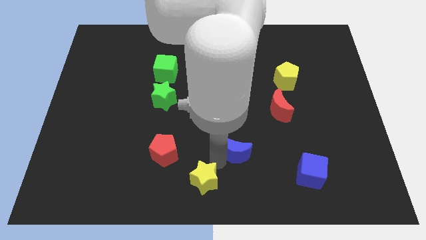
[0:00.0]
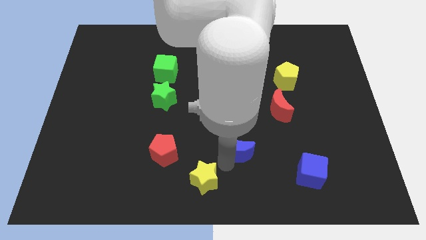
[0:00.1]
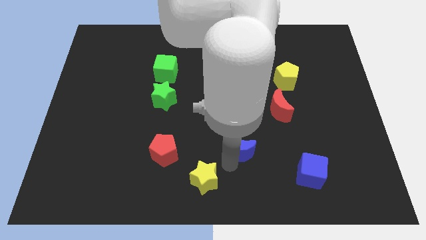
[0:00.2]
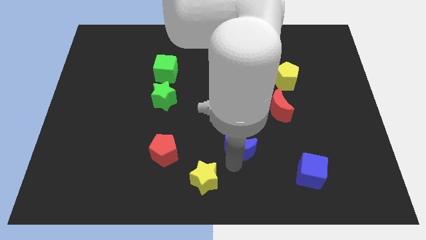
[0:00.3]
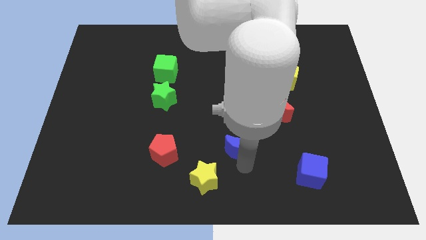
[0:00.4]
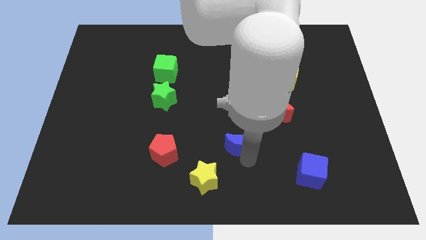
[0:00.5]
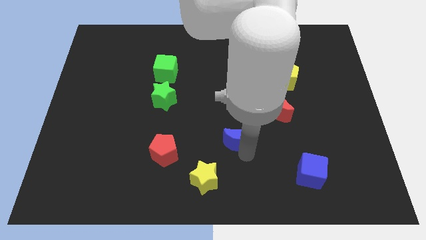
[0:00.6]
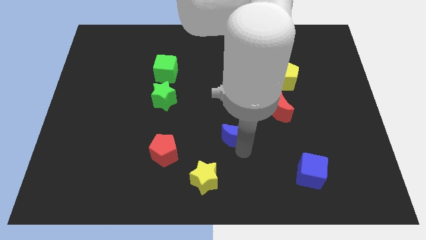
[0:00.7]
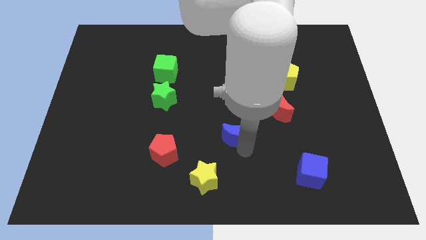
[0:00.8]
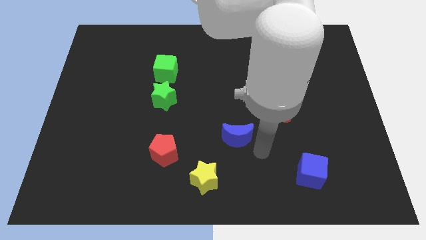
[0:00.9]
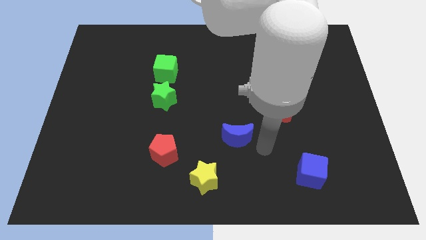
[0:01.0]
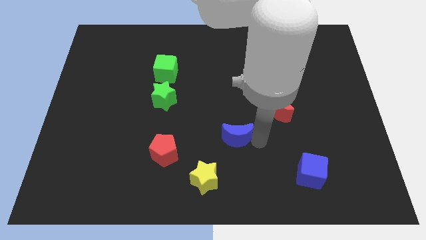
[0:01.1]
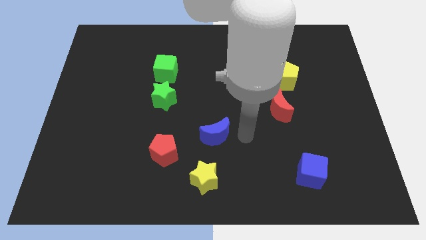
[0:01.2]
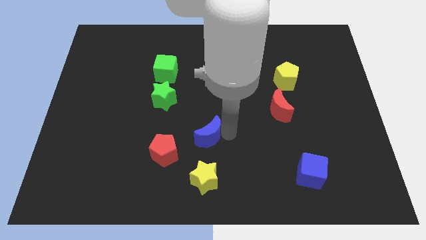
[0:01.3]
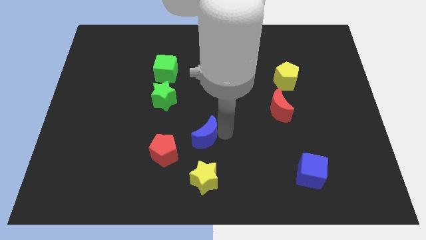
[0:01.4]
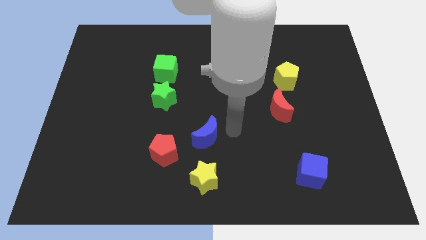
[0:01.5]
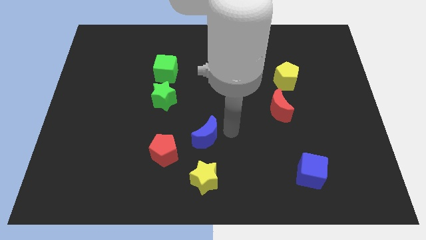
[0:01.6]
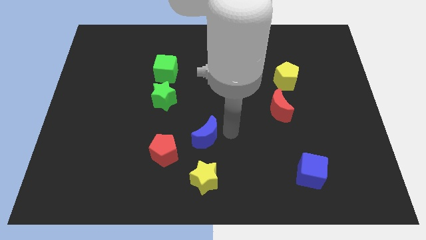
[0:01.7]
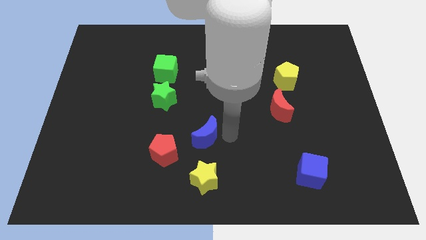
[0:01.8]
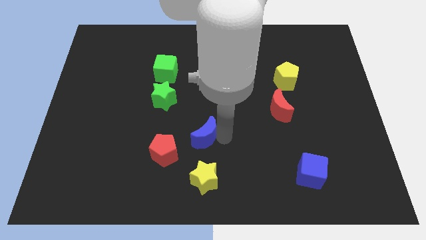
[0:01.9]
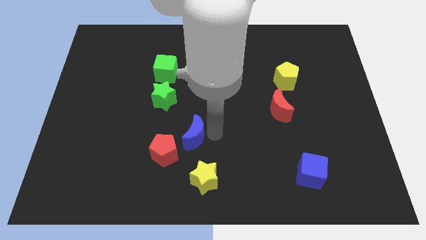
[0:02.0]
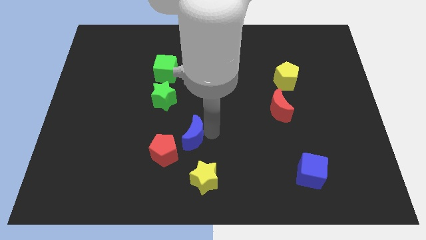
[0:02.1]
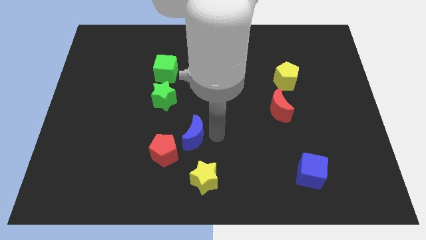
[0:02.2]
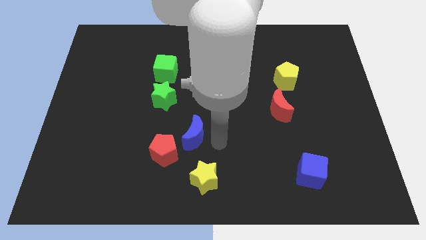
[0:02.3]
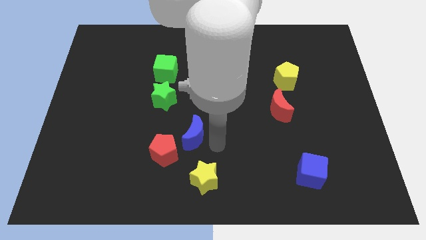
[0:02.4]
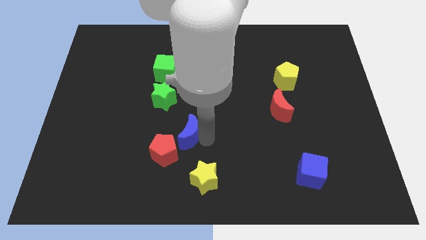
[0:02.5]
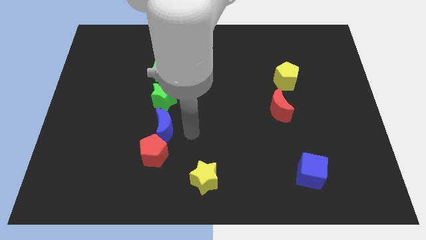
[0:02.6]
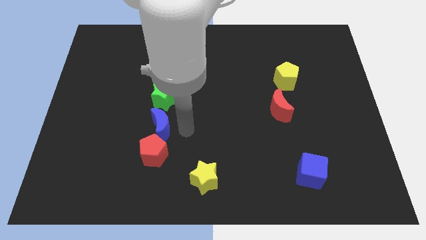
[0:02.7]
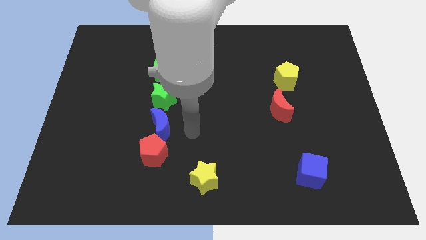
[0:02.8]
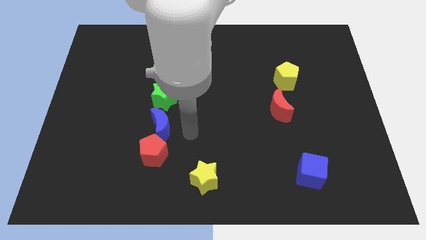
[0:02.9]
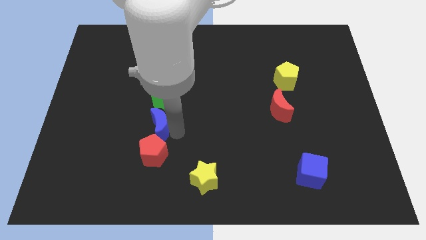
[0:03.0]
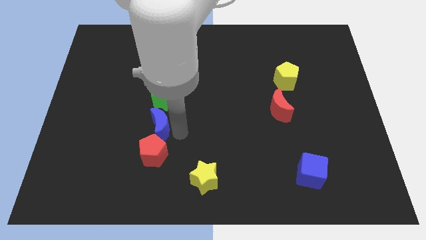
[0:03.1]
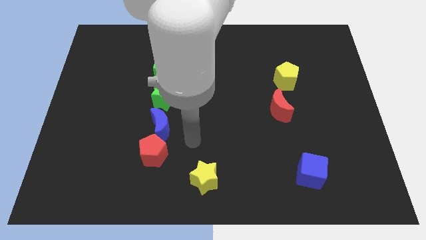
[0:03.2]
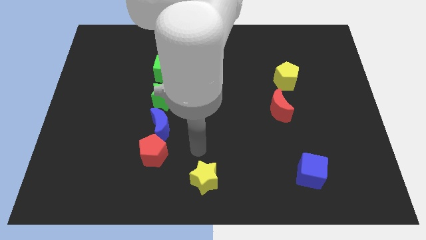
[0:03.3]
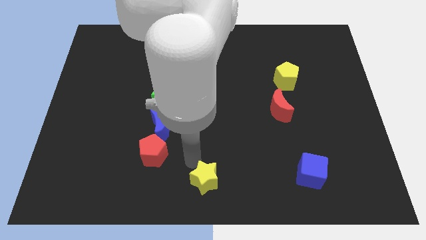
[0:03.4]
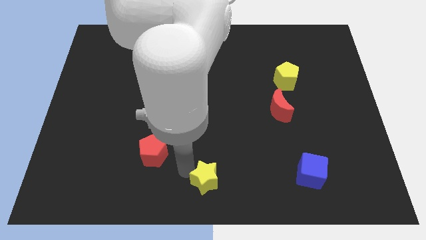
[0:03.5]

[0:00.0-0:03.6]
place blue crescent to the bottom of green star

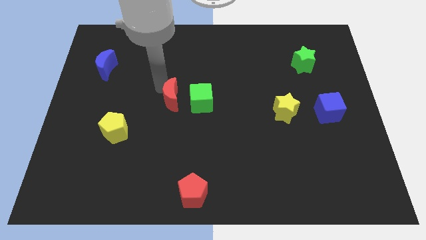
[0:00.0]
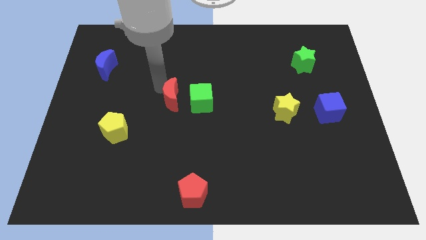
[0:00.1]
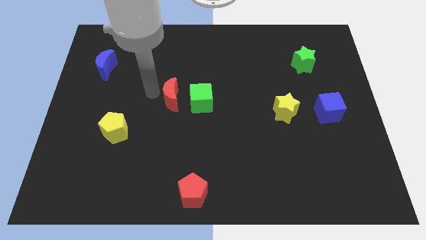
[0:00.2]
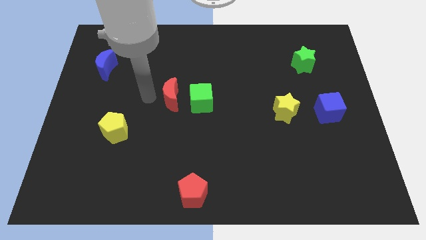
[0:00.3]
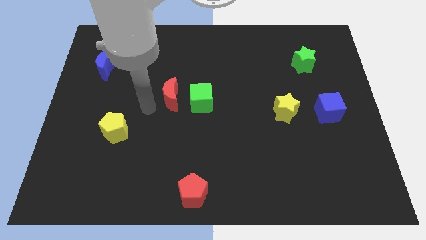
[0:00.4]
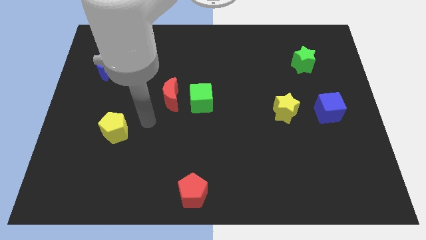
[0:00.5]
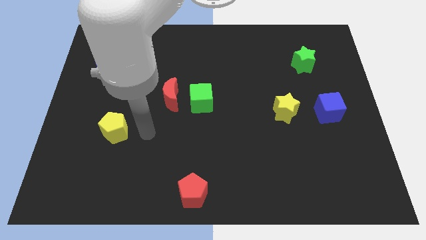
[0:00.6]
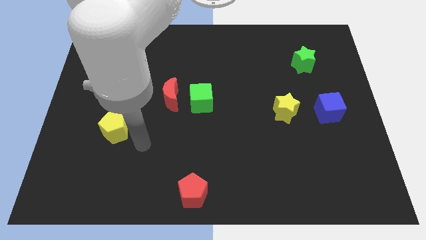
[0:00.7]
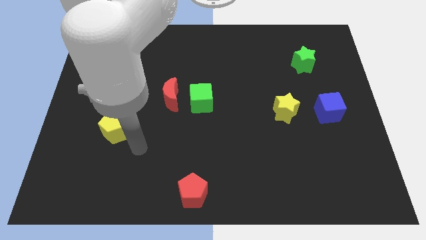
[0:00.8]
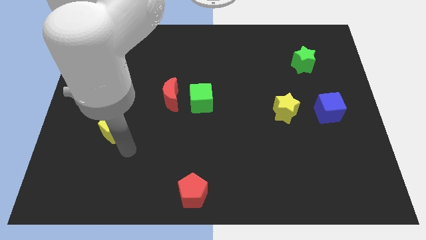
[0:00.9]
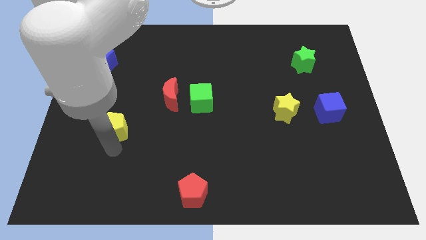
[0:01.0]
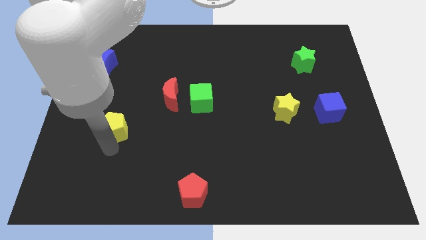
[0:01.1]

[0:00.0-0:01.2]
move your arm to the bottom of the yellow pentagon

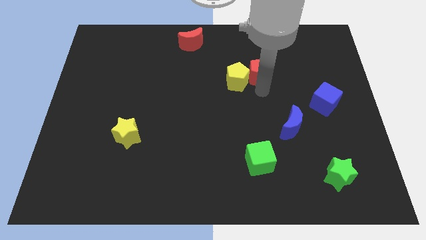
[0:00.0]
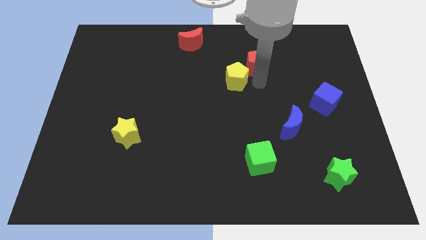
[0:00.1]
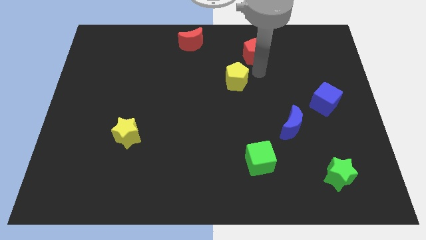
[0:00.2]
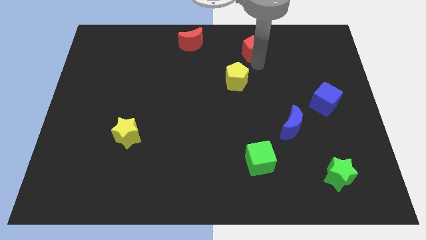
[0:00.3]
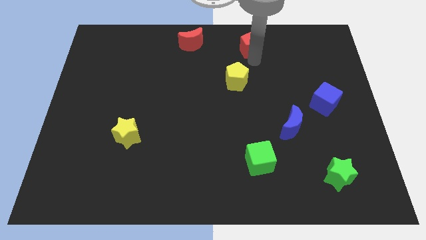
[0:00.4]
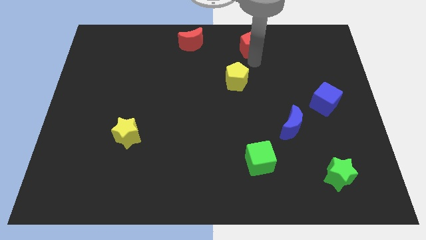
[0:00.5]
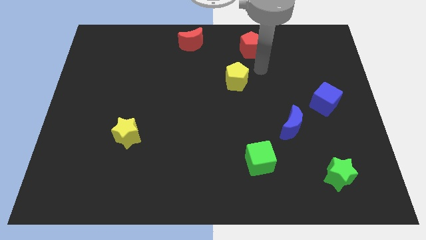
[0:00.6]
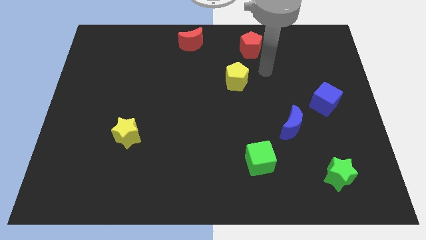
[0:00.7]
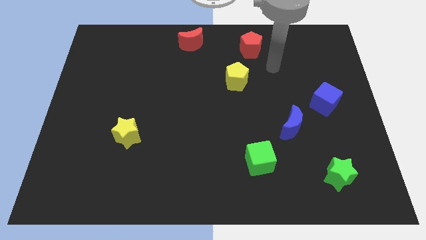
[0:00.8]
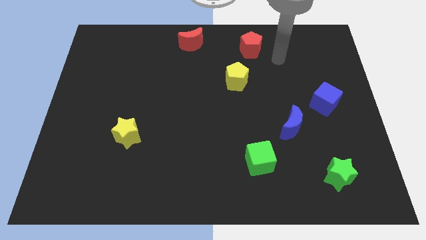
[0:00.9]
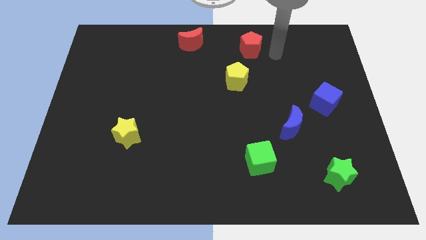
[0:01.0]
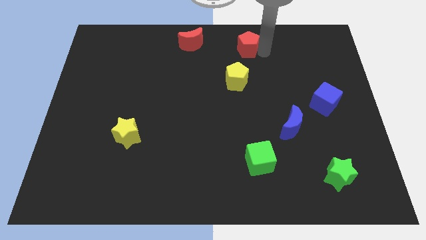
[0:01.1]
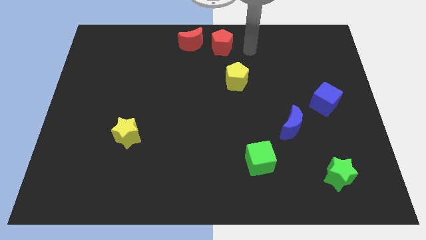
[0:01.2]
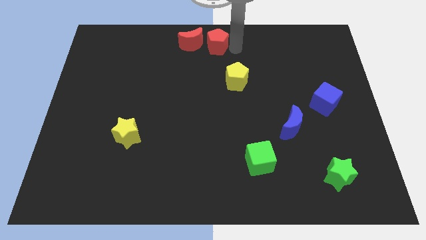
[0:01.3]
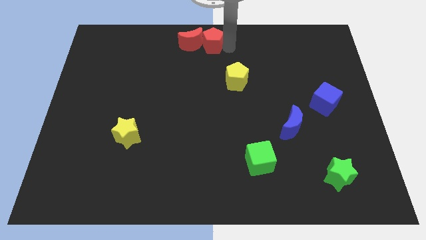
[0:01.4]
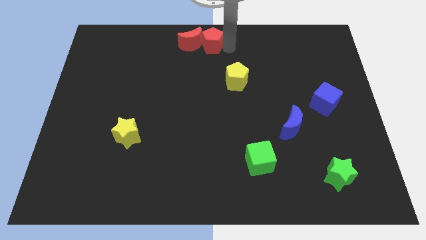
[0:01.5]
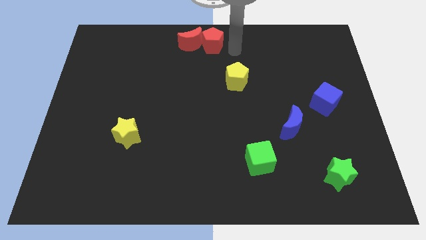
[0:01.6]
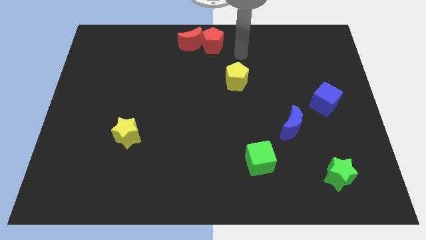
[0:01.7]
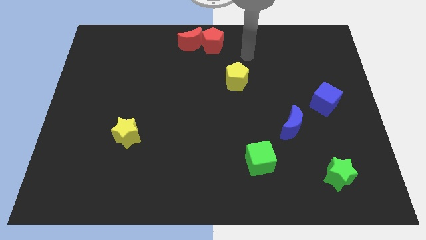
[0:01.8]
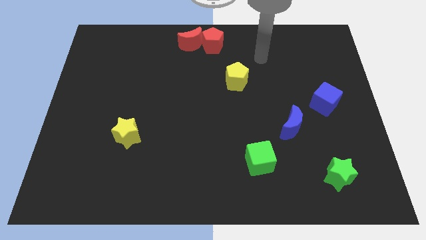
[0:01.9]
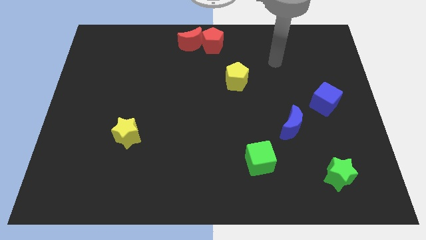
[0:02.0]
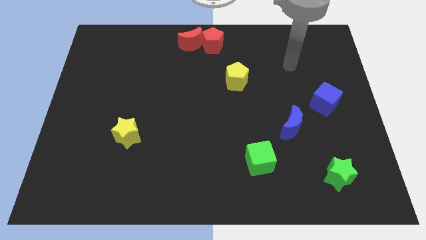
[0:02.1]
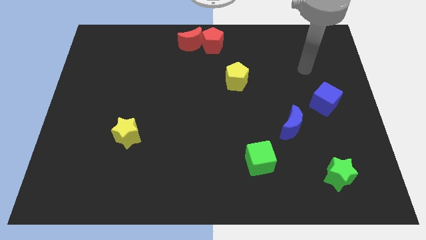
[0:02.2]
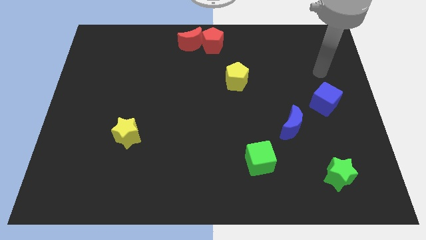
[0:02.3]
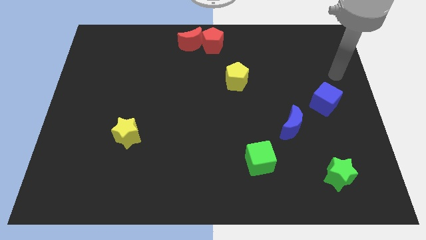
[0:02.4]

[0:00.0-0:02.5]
move red pentagon into the red moon

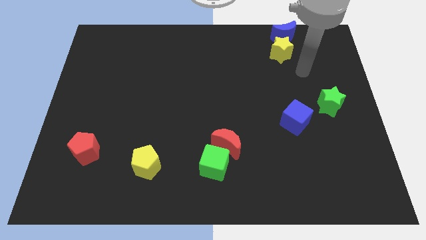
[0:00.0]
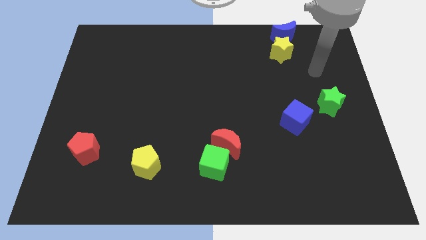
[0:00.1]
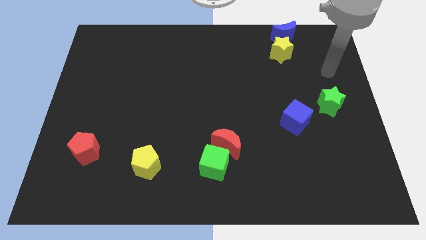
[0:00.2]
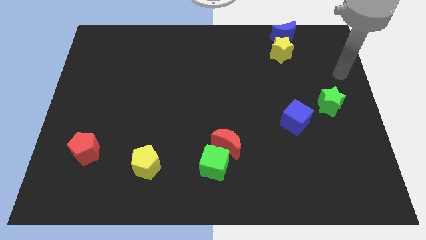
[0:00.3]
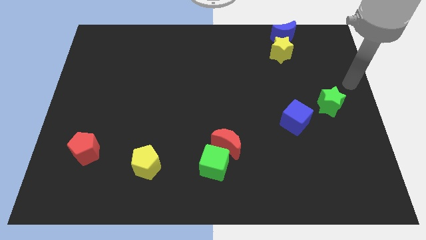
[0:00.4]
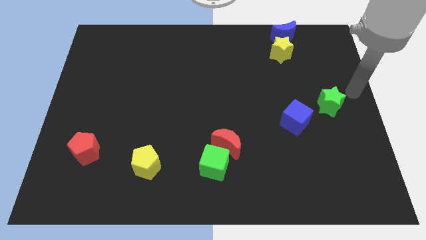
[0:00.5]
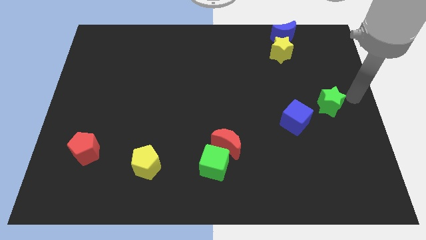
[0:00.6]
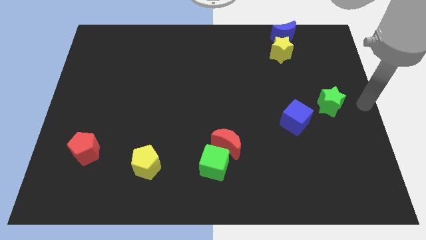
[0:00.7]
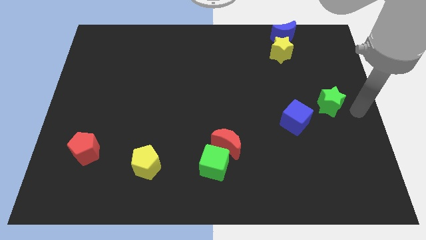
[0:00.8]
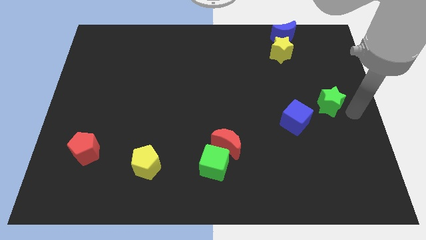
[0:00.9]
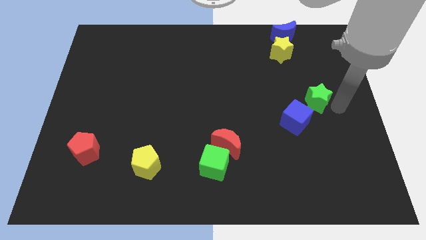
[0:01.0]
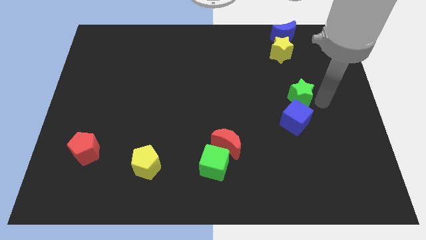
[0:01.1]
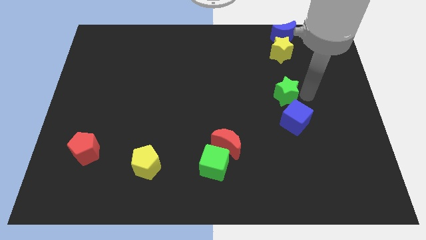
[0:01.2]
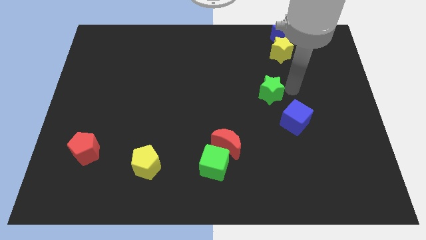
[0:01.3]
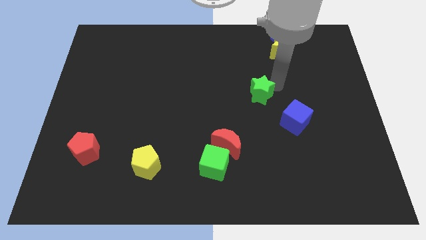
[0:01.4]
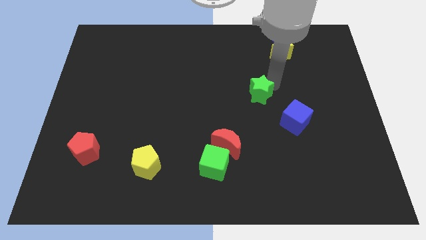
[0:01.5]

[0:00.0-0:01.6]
push the green star towards center
